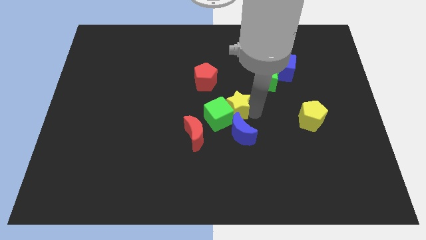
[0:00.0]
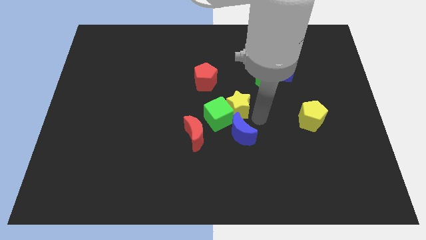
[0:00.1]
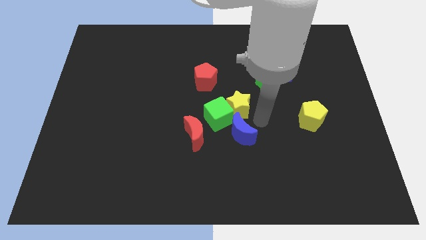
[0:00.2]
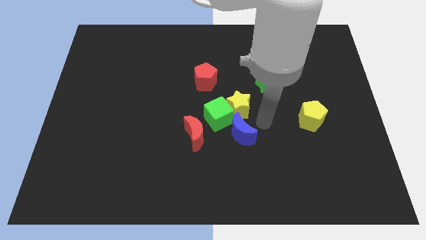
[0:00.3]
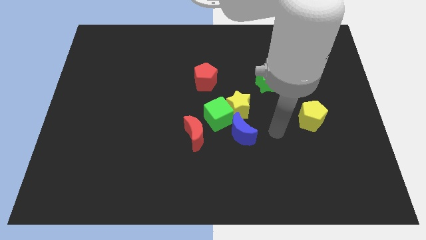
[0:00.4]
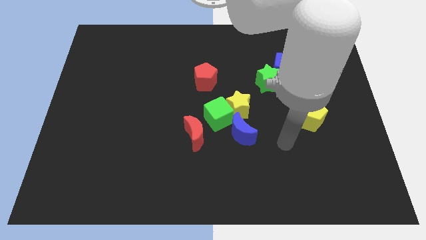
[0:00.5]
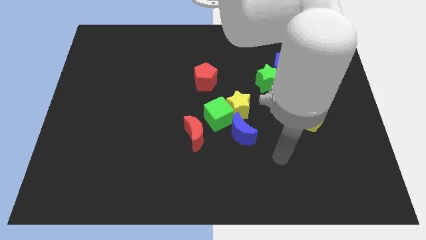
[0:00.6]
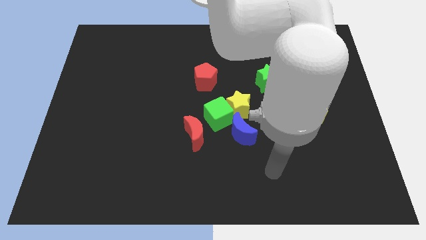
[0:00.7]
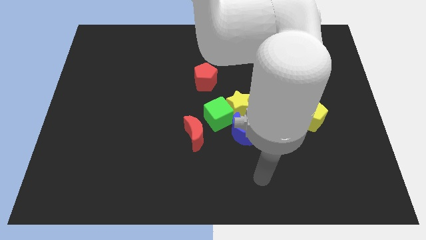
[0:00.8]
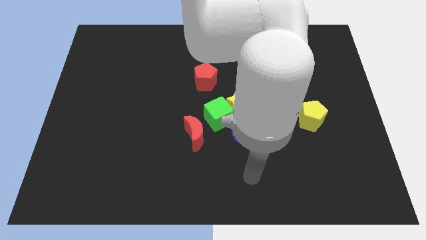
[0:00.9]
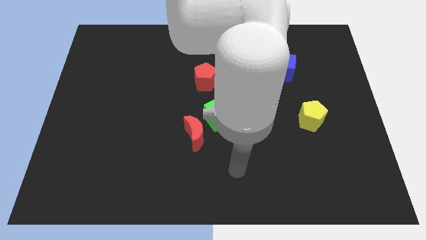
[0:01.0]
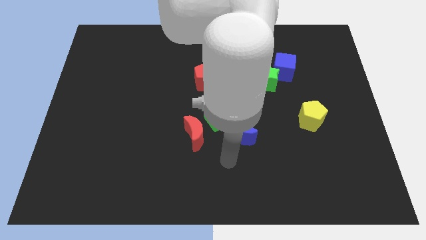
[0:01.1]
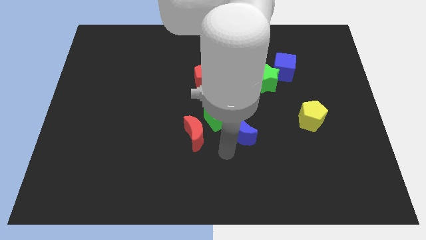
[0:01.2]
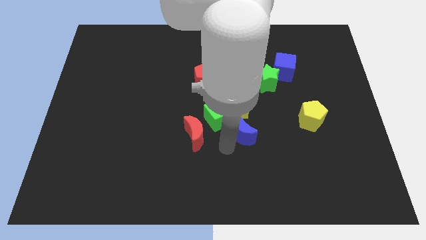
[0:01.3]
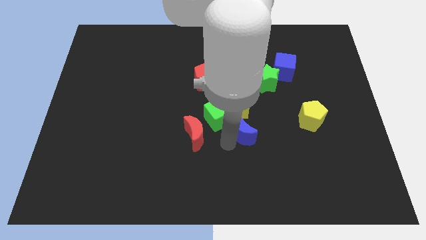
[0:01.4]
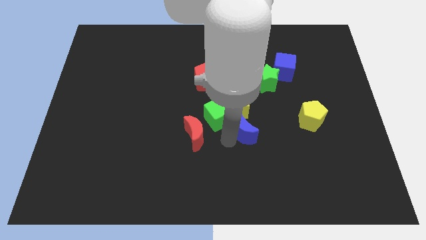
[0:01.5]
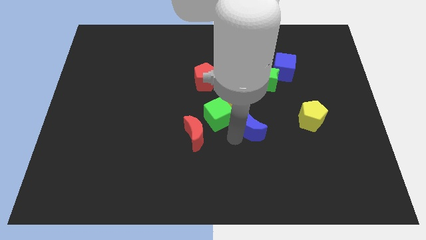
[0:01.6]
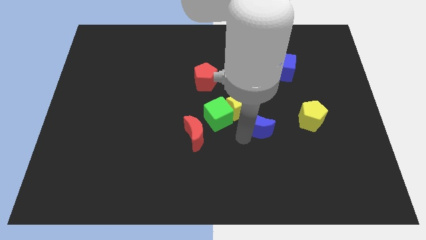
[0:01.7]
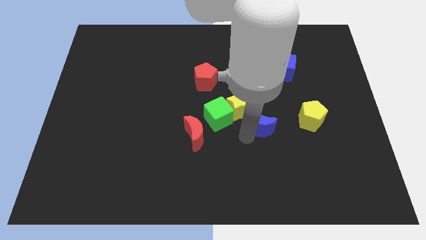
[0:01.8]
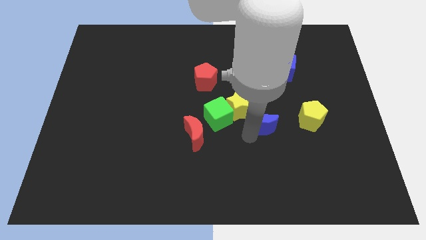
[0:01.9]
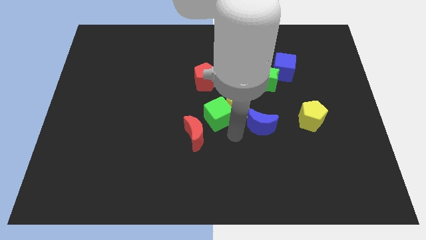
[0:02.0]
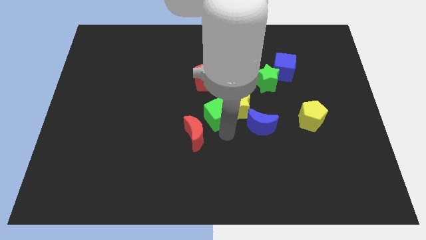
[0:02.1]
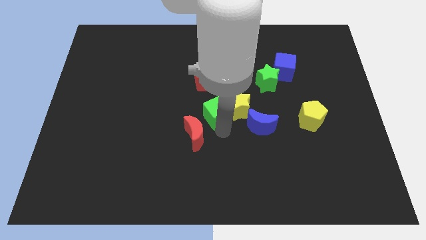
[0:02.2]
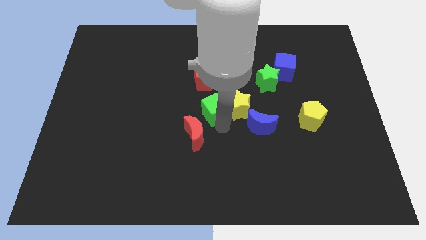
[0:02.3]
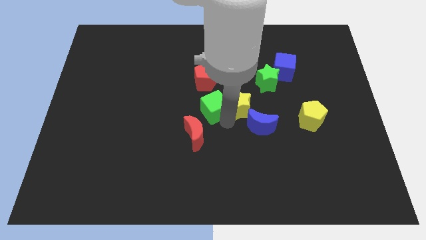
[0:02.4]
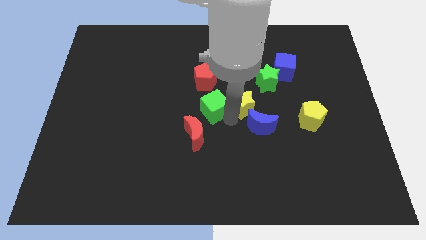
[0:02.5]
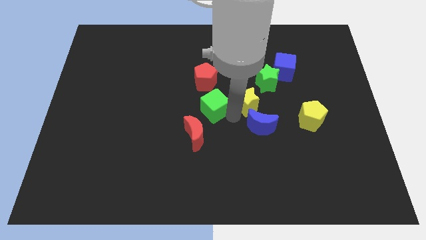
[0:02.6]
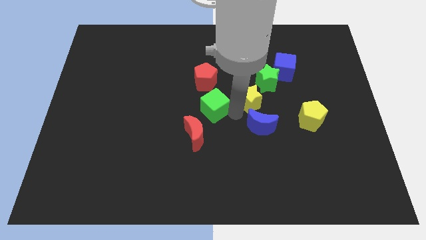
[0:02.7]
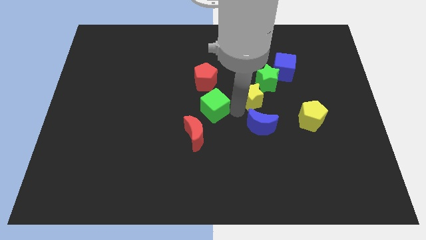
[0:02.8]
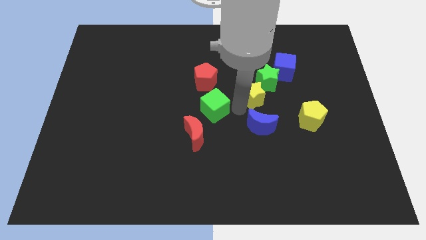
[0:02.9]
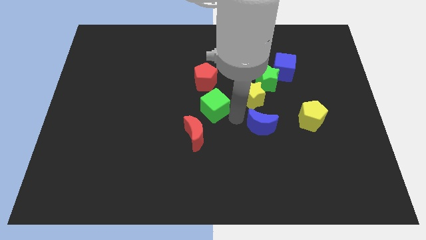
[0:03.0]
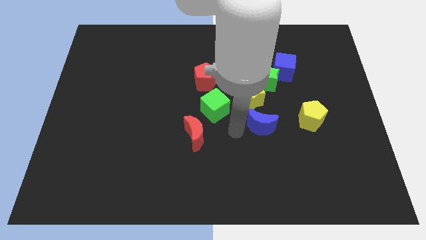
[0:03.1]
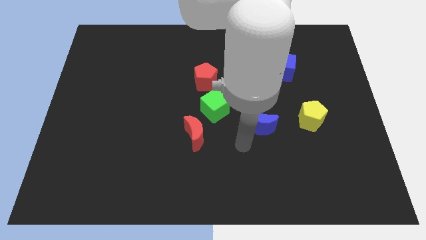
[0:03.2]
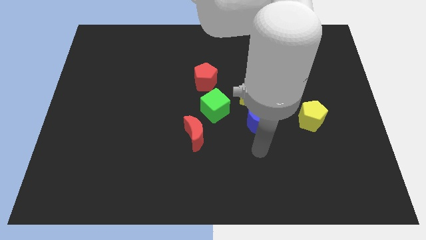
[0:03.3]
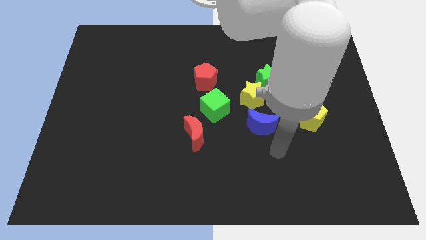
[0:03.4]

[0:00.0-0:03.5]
slide the yellow star into the green cube

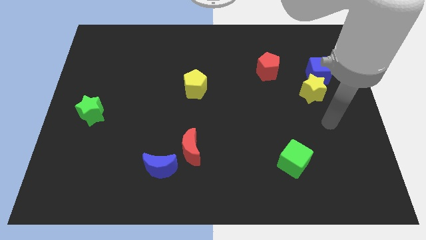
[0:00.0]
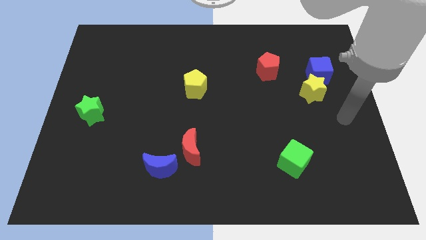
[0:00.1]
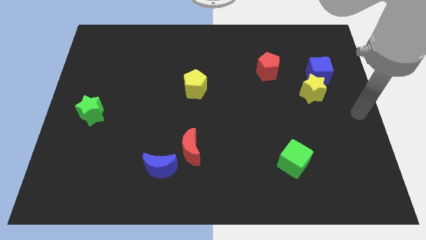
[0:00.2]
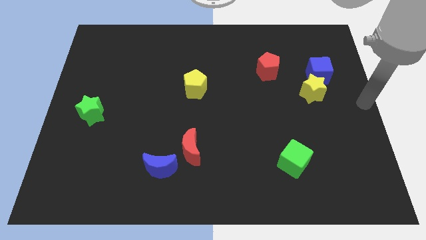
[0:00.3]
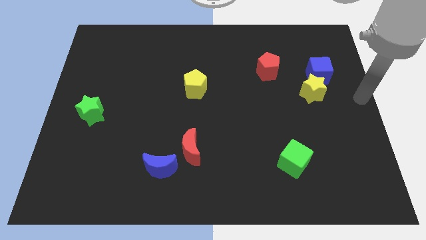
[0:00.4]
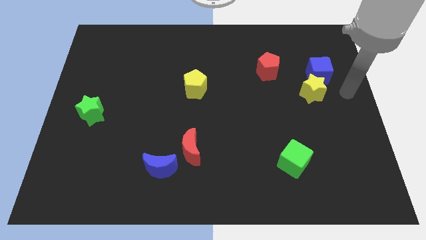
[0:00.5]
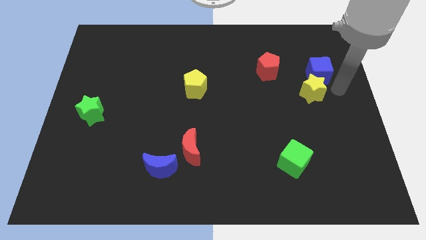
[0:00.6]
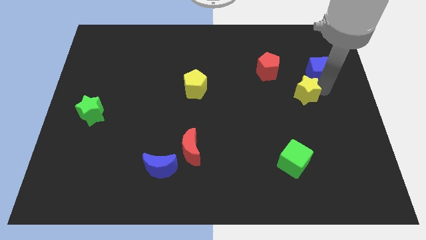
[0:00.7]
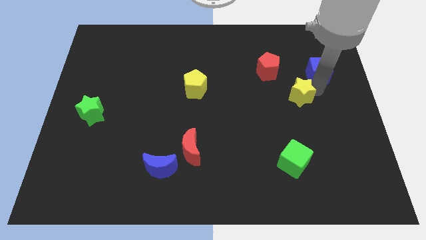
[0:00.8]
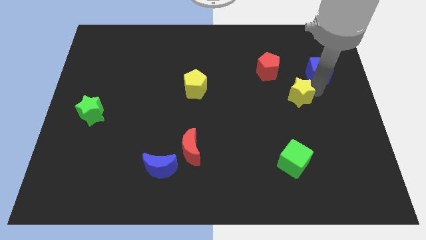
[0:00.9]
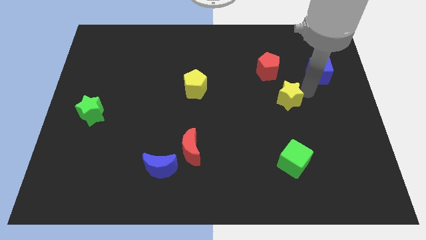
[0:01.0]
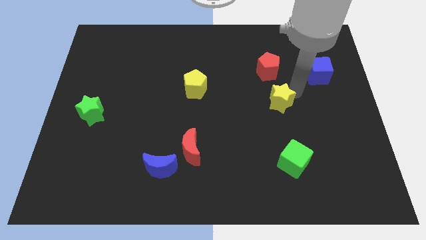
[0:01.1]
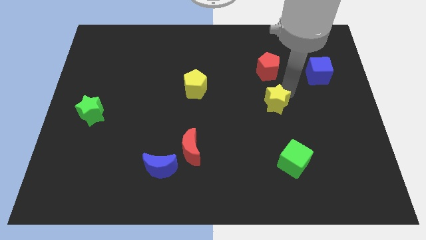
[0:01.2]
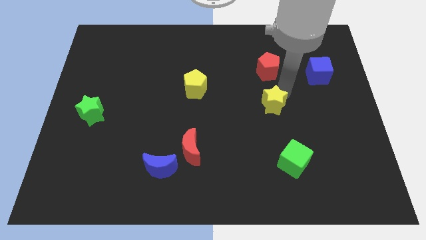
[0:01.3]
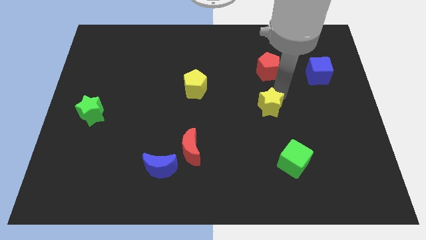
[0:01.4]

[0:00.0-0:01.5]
push yellow star to the bottom of red pentagon

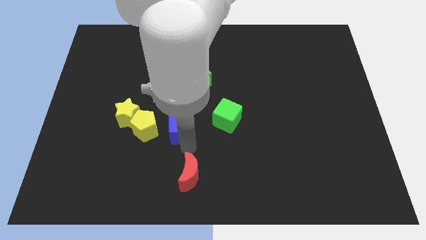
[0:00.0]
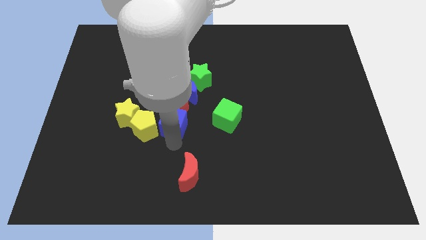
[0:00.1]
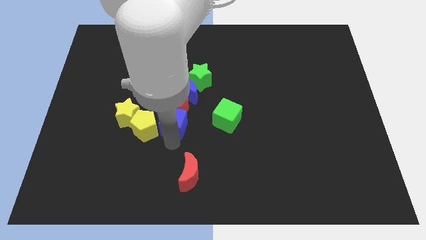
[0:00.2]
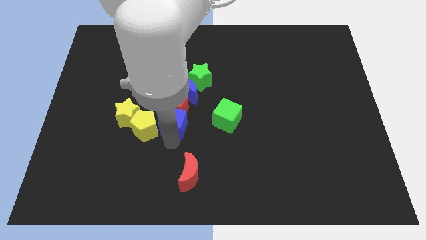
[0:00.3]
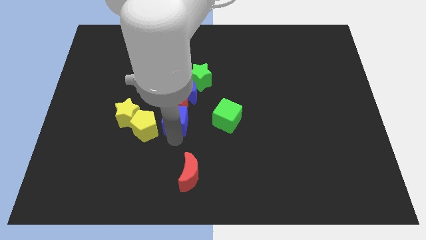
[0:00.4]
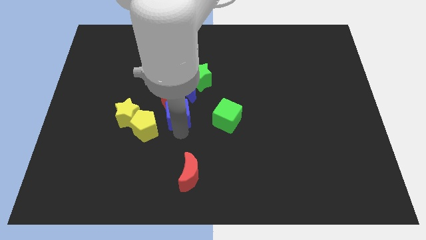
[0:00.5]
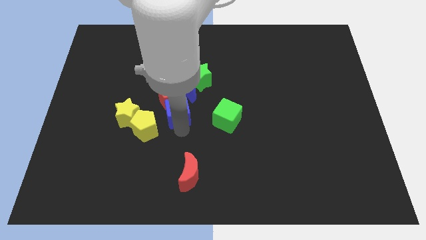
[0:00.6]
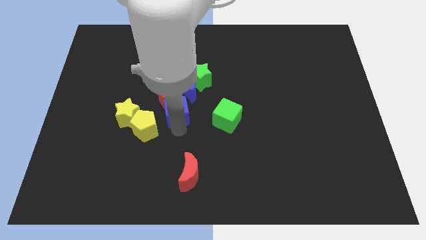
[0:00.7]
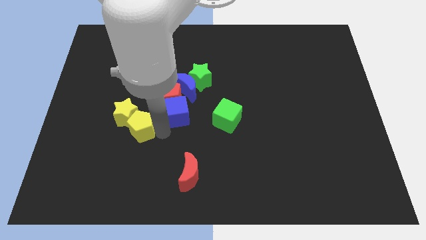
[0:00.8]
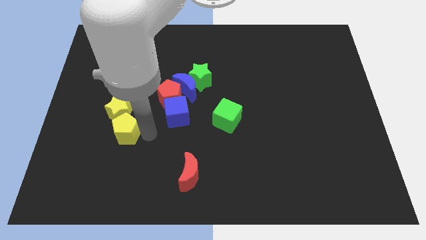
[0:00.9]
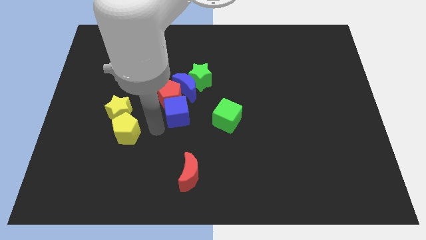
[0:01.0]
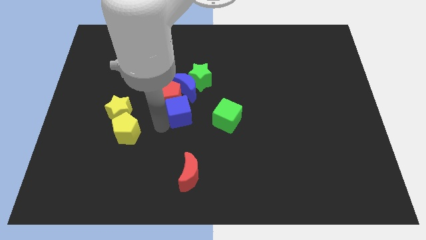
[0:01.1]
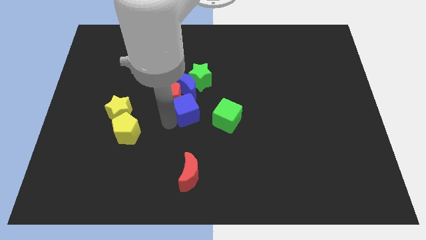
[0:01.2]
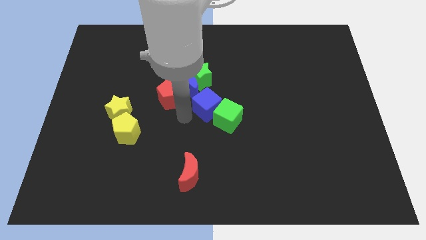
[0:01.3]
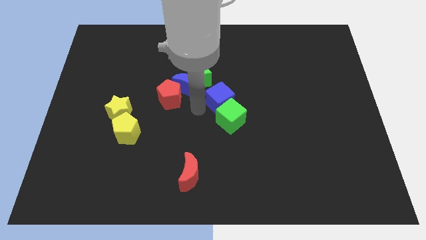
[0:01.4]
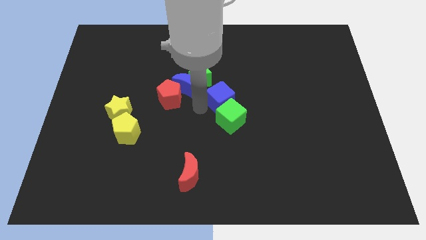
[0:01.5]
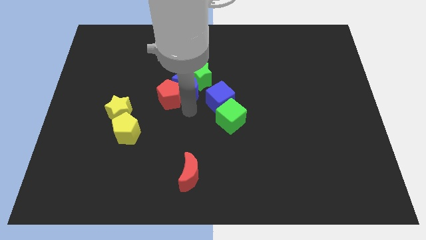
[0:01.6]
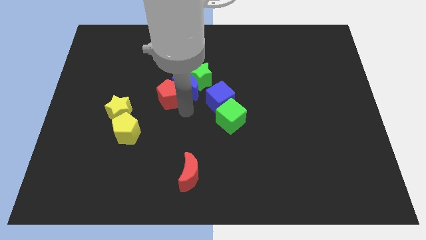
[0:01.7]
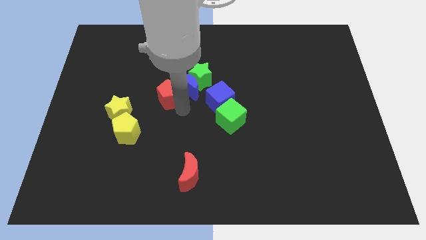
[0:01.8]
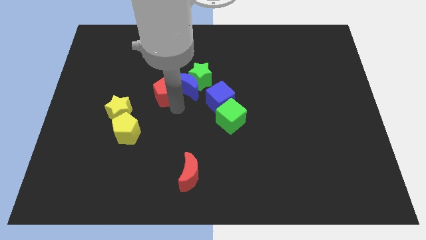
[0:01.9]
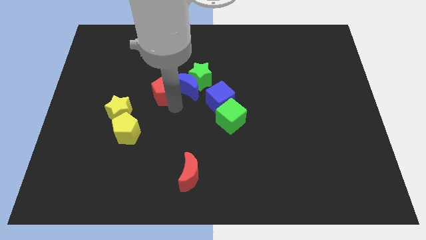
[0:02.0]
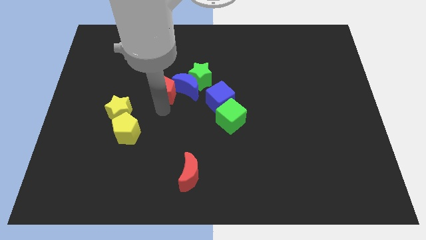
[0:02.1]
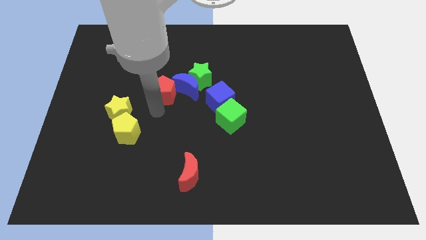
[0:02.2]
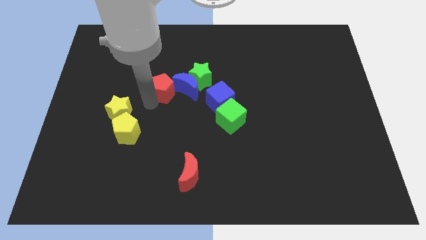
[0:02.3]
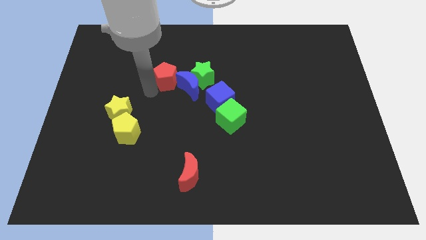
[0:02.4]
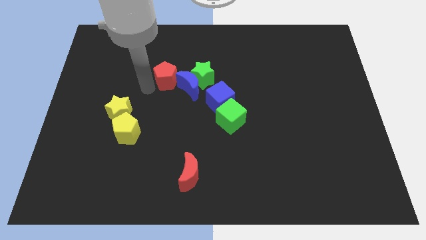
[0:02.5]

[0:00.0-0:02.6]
separate the blue cube and red pentagon from each other

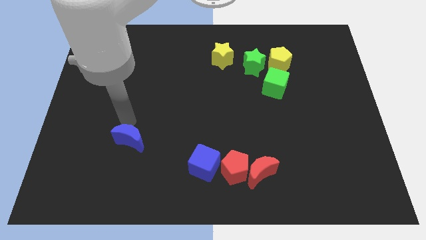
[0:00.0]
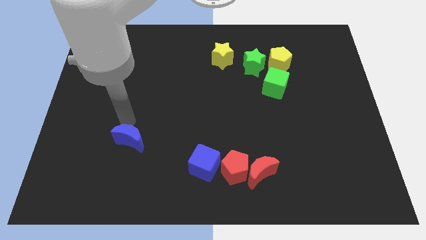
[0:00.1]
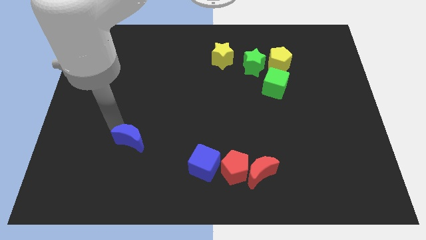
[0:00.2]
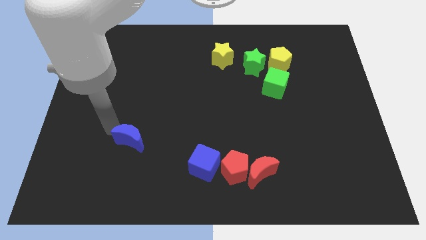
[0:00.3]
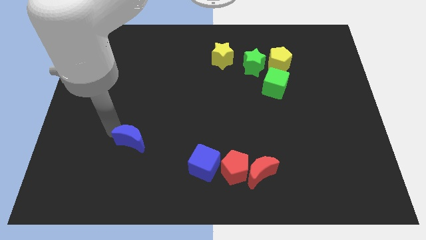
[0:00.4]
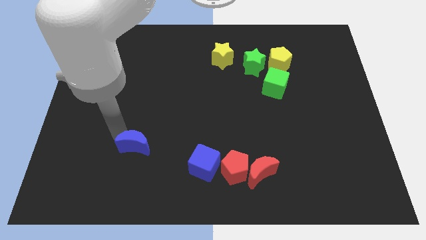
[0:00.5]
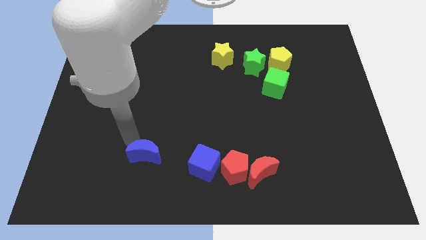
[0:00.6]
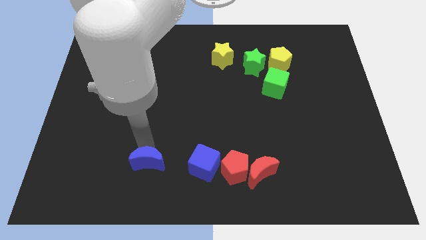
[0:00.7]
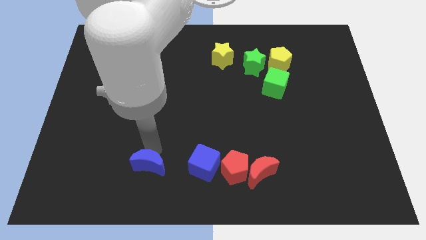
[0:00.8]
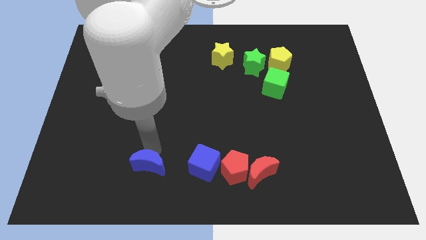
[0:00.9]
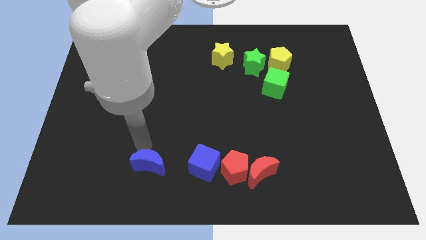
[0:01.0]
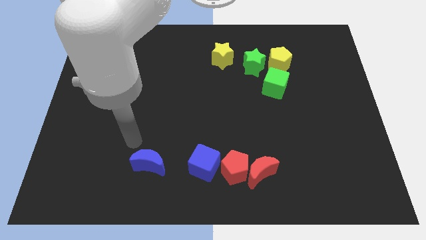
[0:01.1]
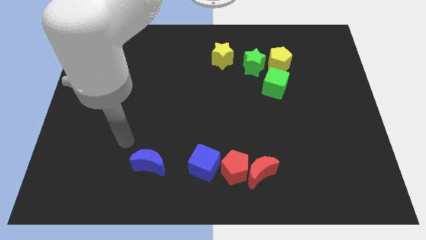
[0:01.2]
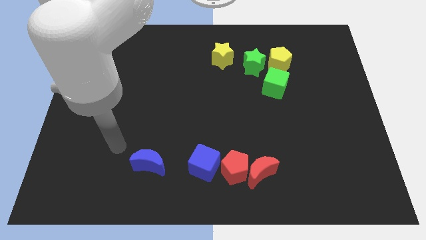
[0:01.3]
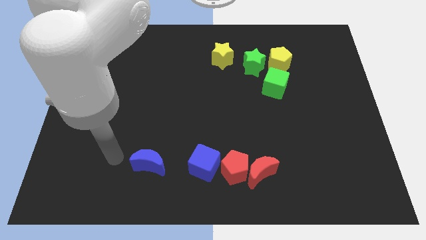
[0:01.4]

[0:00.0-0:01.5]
move the blue crescent left of the blue cube
